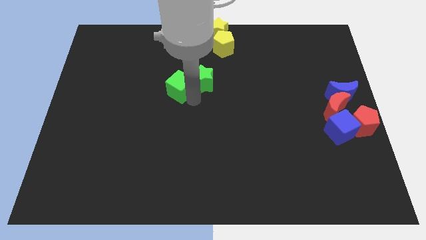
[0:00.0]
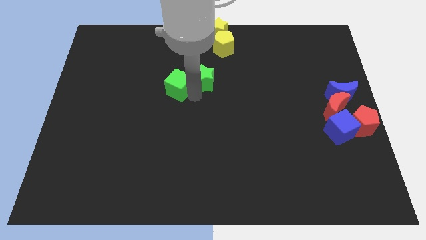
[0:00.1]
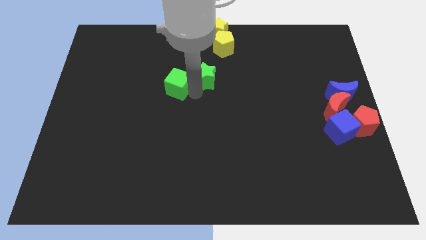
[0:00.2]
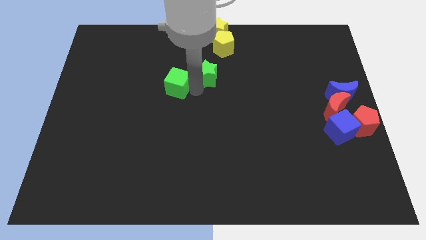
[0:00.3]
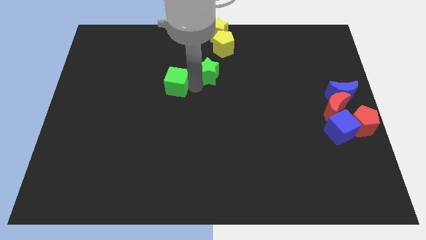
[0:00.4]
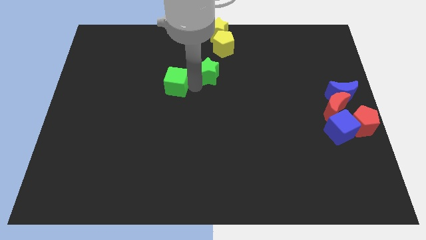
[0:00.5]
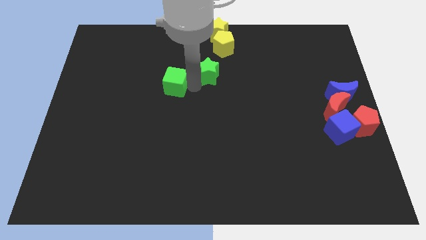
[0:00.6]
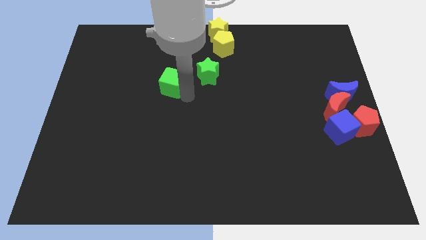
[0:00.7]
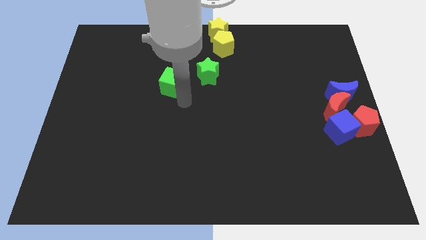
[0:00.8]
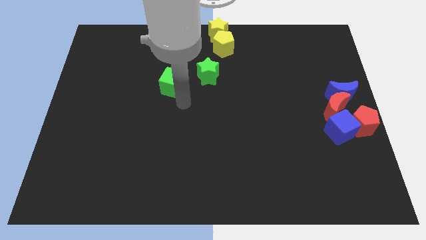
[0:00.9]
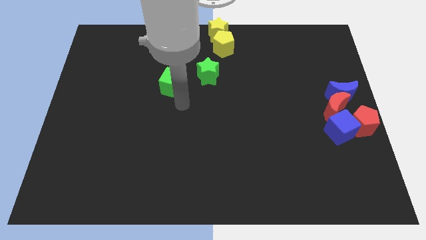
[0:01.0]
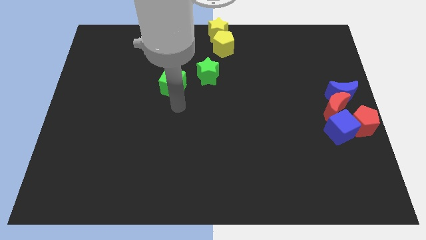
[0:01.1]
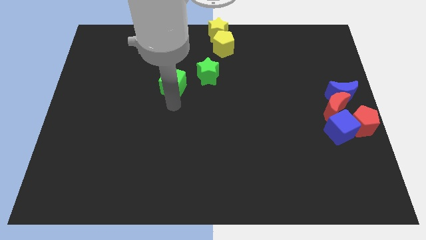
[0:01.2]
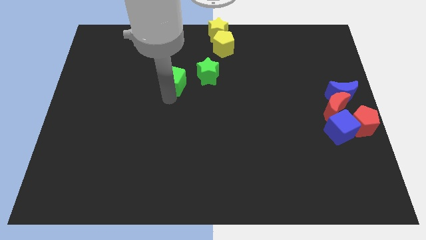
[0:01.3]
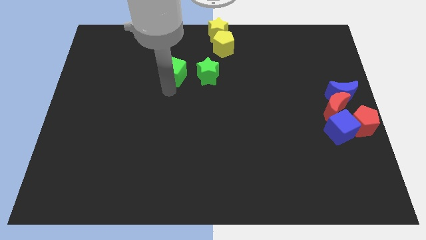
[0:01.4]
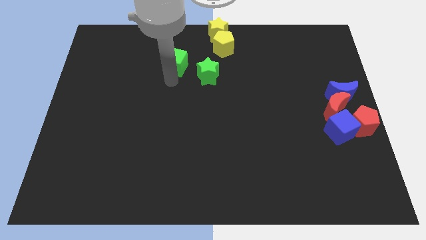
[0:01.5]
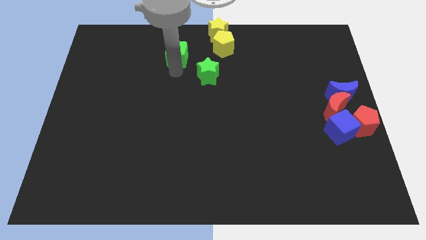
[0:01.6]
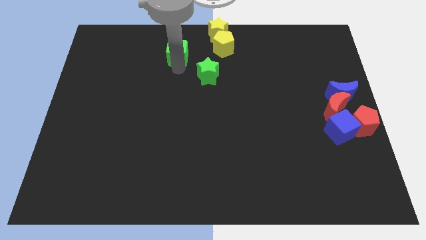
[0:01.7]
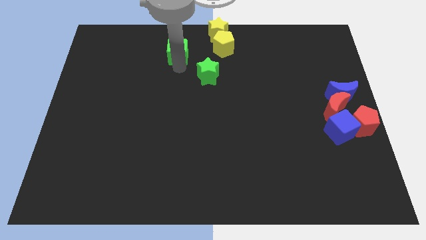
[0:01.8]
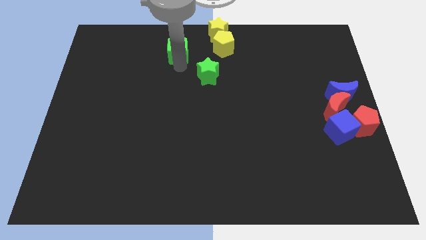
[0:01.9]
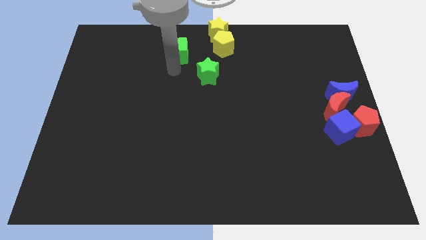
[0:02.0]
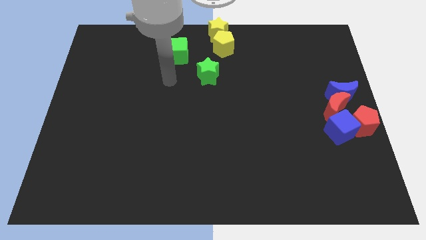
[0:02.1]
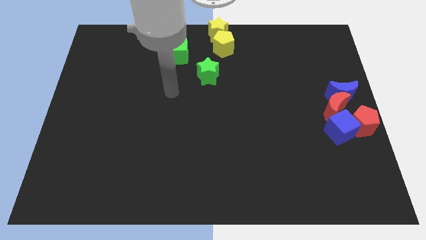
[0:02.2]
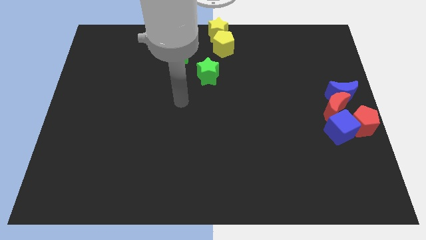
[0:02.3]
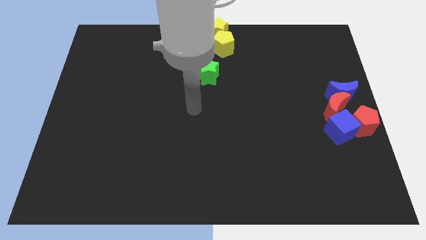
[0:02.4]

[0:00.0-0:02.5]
move the green blocks towards the top center

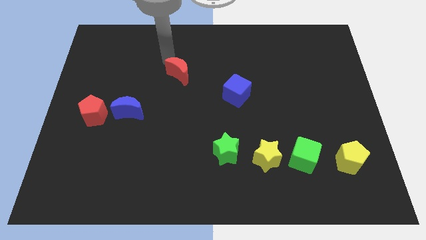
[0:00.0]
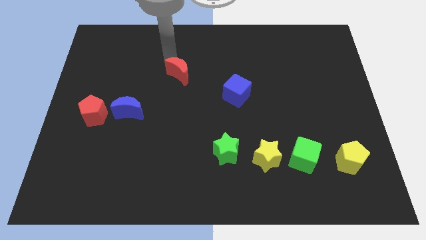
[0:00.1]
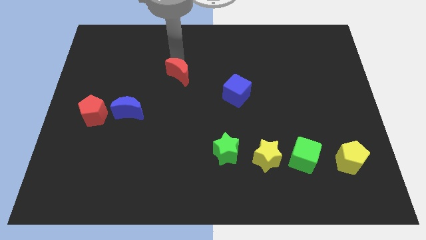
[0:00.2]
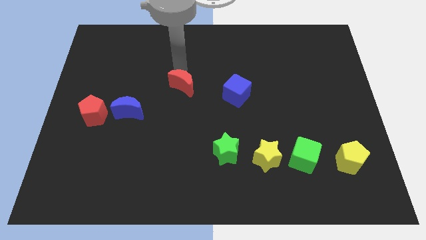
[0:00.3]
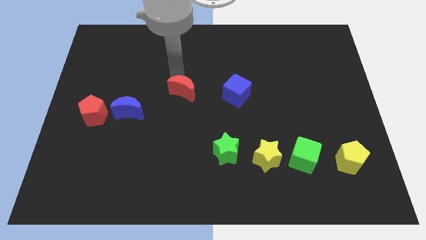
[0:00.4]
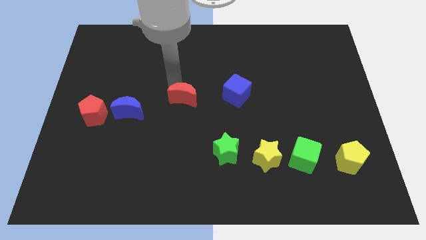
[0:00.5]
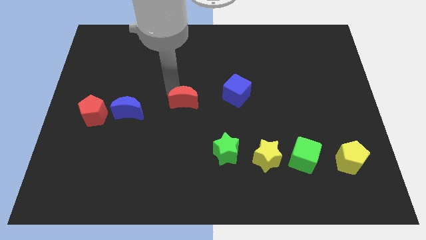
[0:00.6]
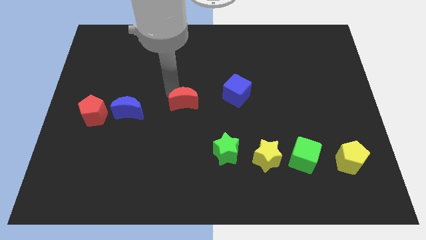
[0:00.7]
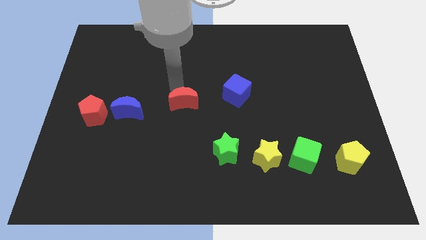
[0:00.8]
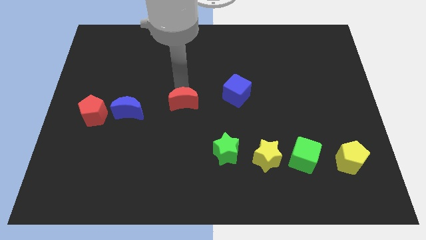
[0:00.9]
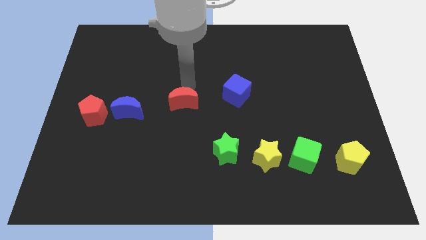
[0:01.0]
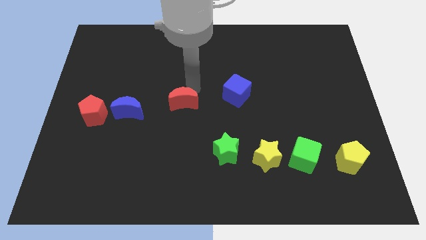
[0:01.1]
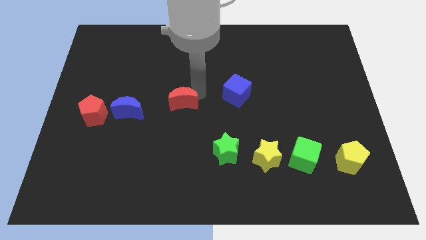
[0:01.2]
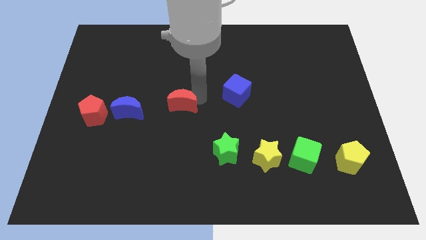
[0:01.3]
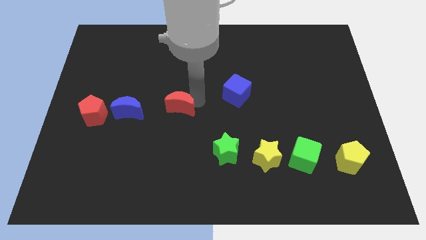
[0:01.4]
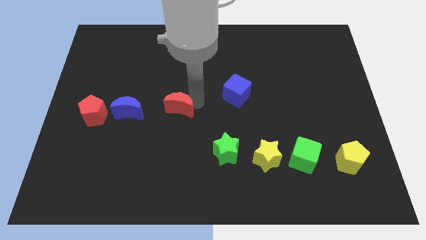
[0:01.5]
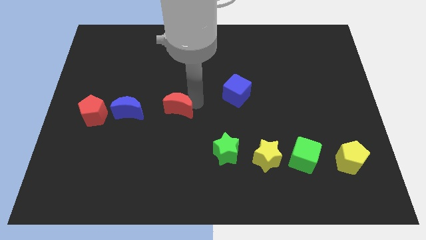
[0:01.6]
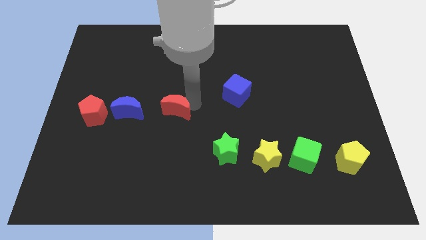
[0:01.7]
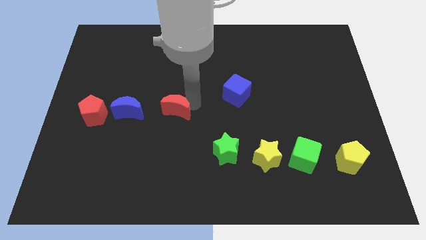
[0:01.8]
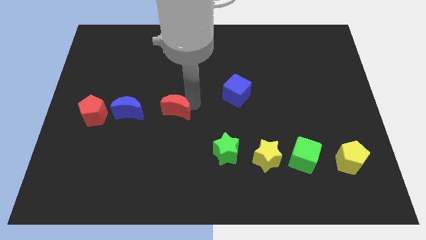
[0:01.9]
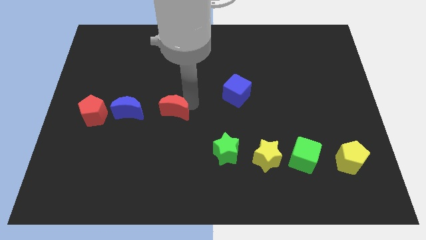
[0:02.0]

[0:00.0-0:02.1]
place the red moon to the right of the blue moon

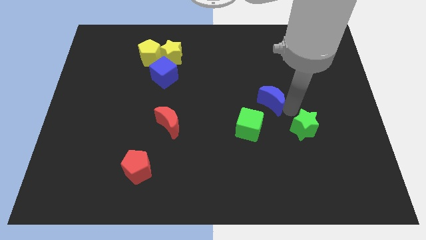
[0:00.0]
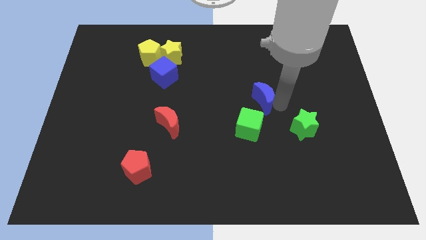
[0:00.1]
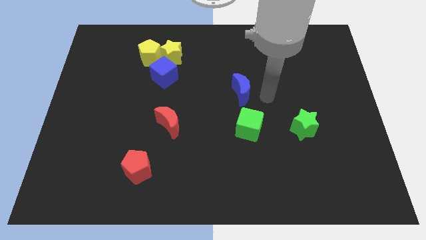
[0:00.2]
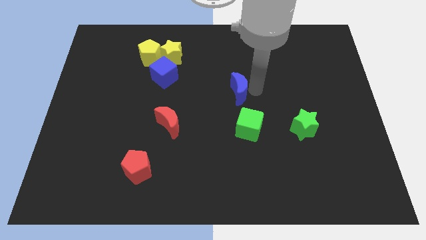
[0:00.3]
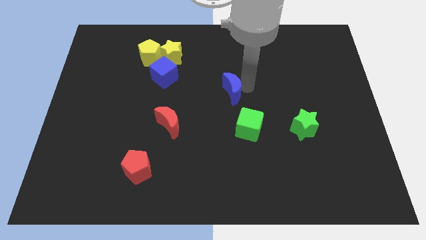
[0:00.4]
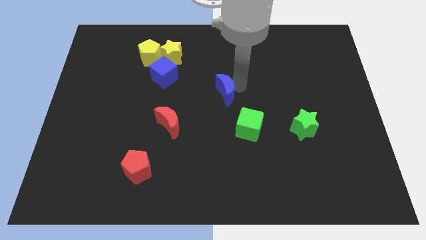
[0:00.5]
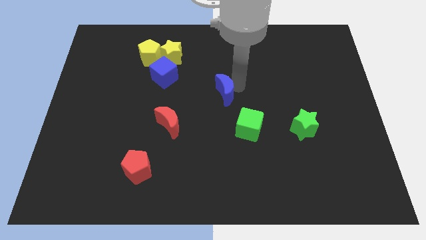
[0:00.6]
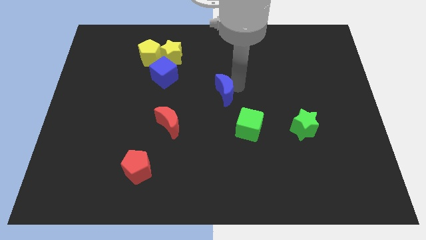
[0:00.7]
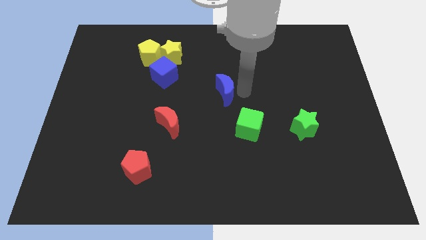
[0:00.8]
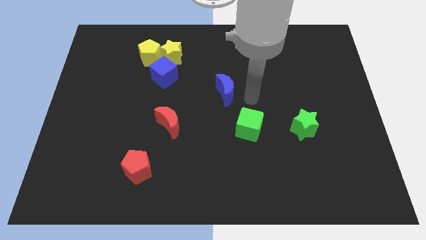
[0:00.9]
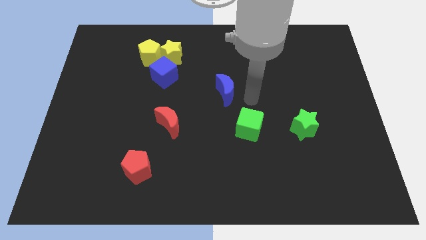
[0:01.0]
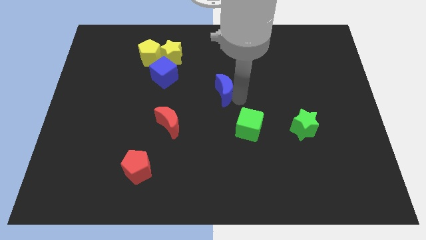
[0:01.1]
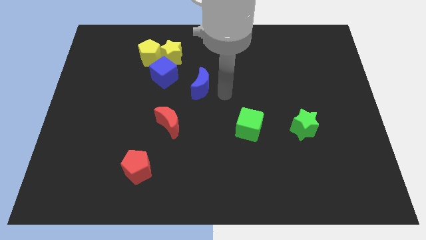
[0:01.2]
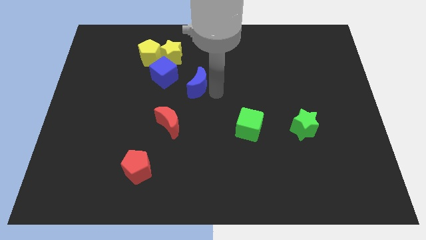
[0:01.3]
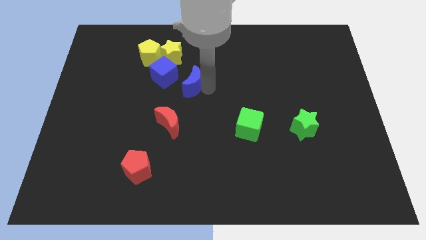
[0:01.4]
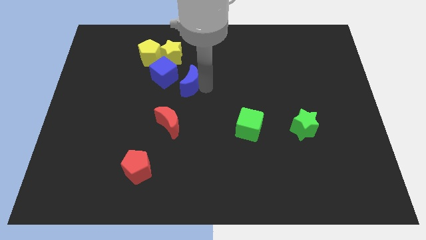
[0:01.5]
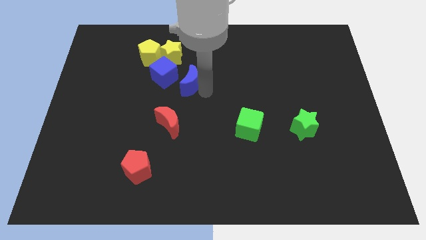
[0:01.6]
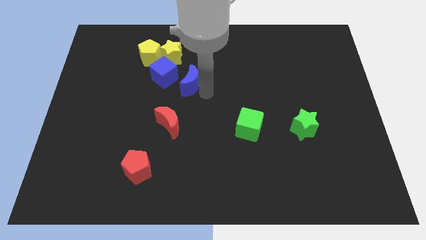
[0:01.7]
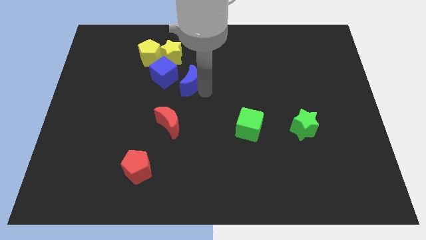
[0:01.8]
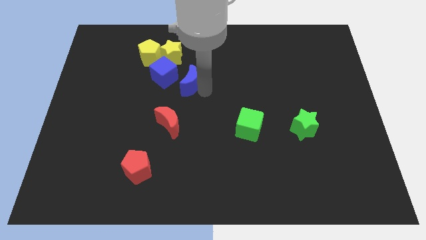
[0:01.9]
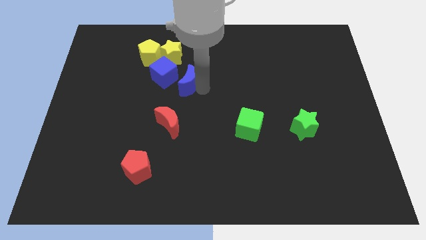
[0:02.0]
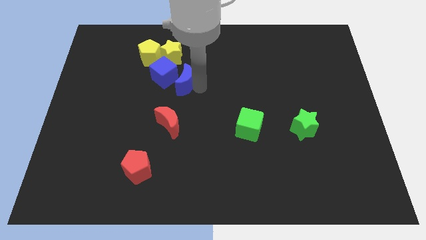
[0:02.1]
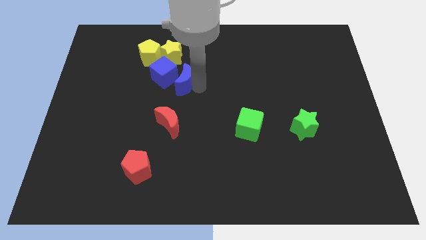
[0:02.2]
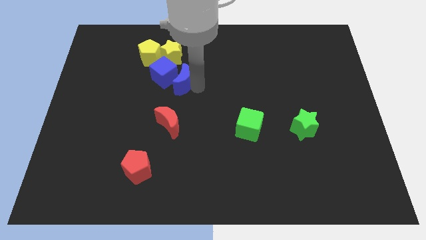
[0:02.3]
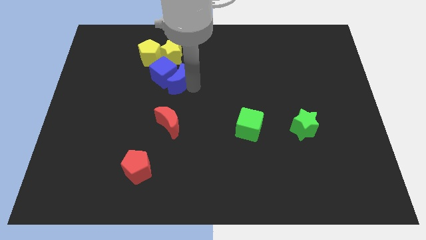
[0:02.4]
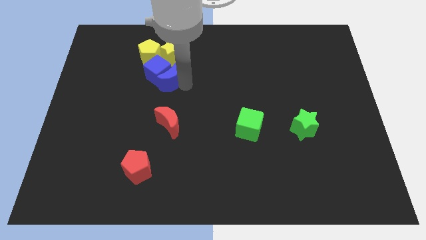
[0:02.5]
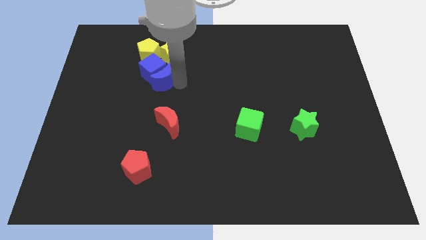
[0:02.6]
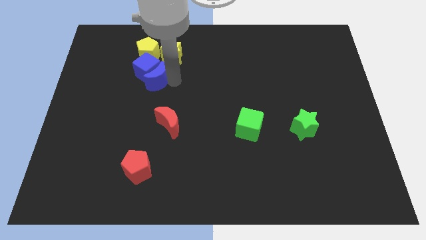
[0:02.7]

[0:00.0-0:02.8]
move the blue crescent into the blue cube

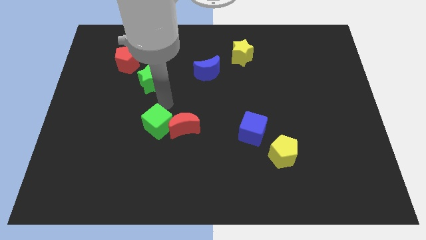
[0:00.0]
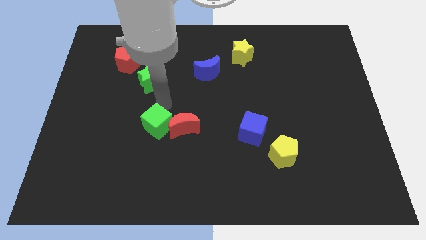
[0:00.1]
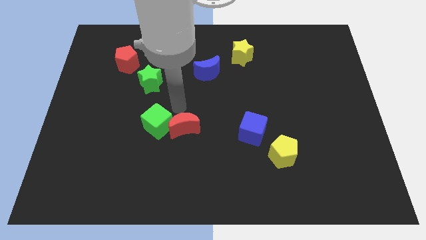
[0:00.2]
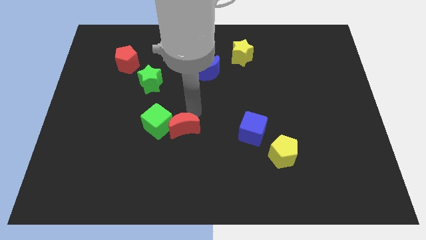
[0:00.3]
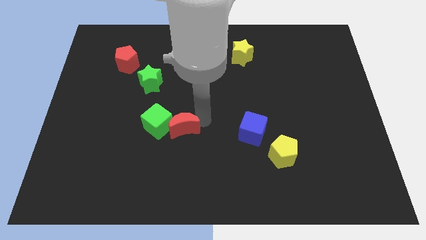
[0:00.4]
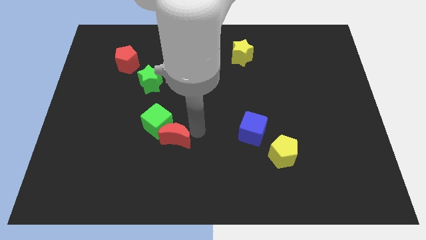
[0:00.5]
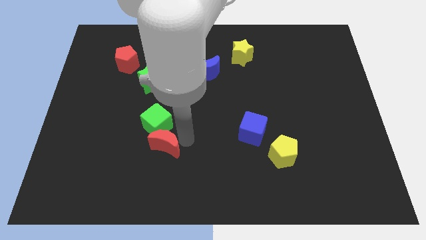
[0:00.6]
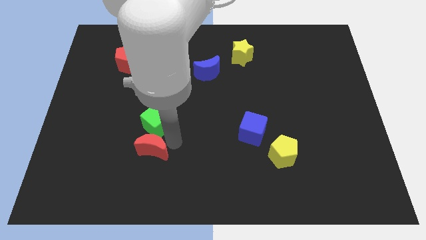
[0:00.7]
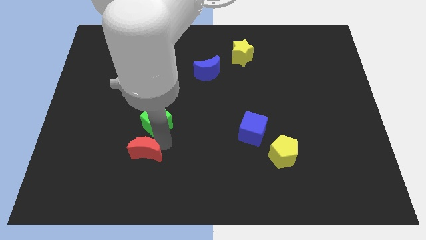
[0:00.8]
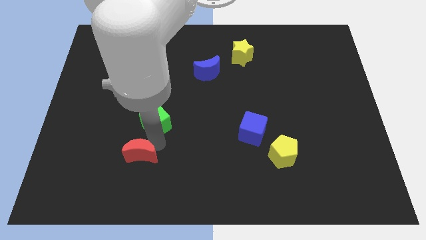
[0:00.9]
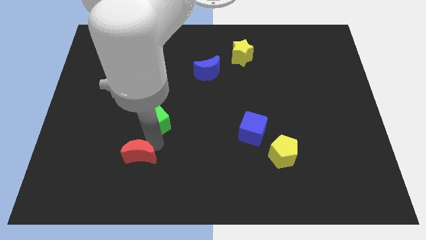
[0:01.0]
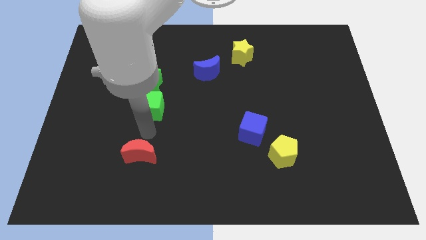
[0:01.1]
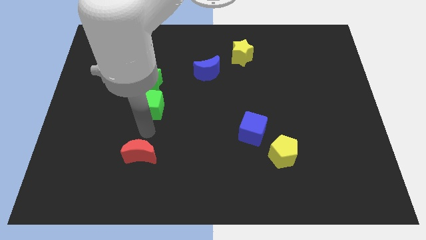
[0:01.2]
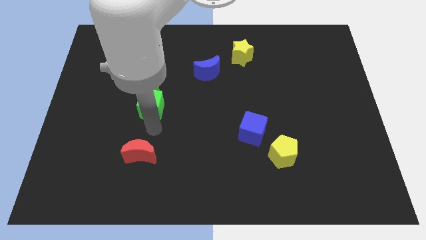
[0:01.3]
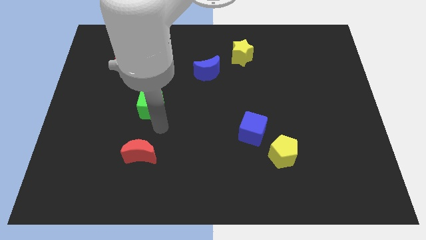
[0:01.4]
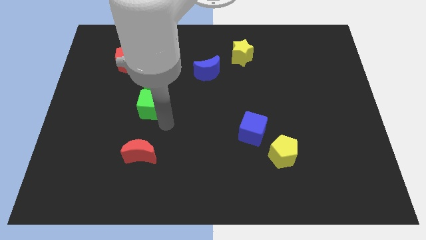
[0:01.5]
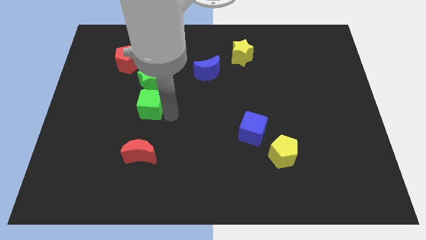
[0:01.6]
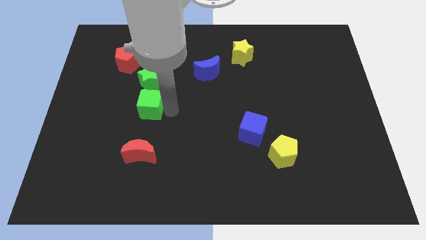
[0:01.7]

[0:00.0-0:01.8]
separate green cube and red moon
